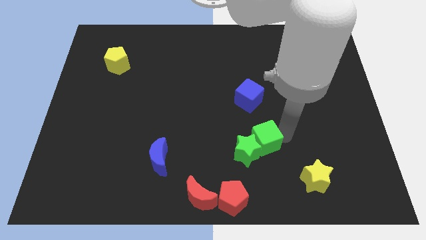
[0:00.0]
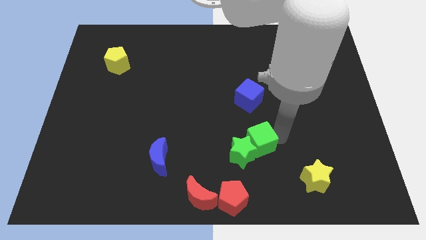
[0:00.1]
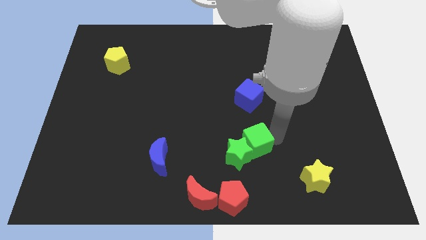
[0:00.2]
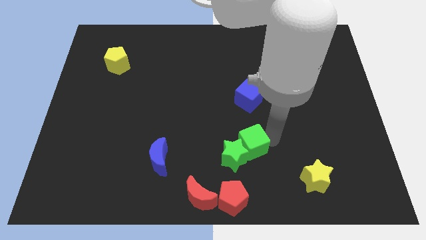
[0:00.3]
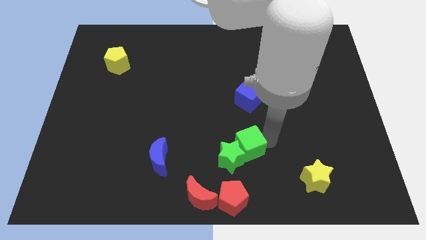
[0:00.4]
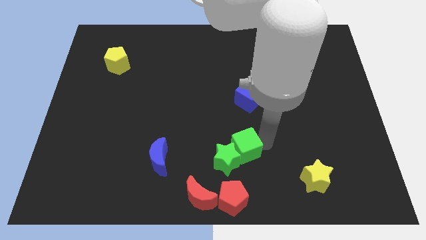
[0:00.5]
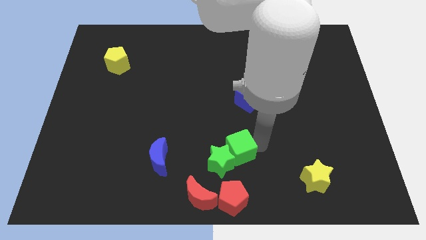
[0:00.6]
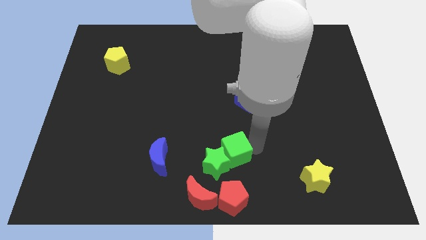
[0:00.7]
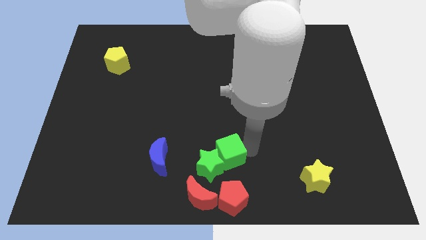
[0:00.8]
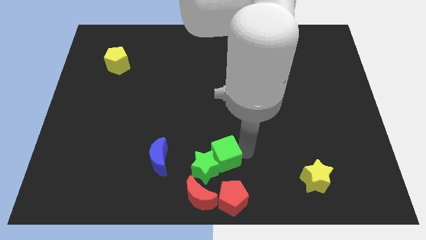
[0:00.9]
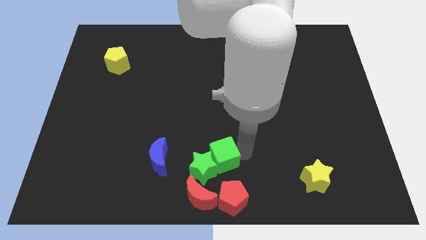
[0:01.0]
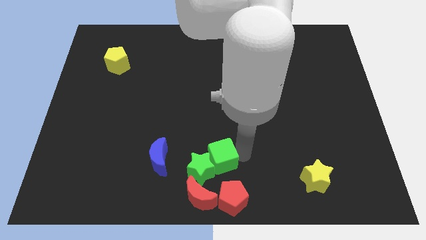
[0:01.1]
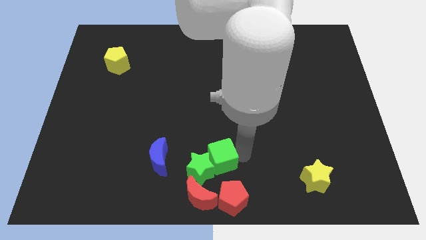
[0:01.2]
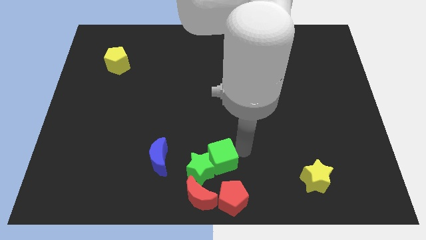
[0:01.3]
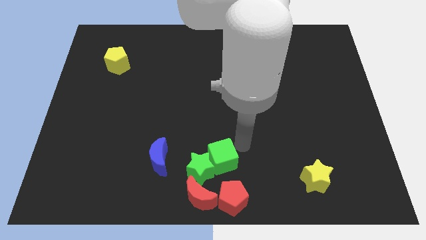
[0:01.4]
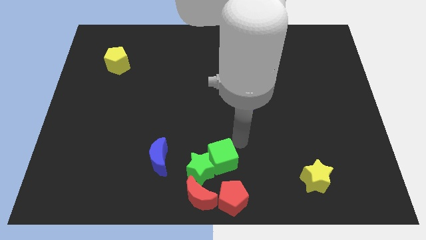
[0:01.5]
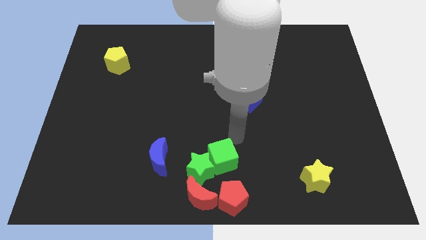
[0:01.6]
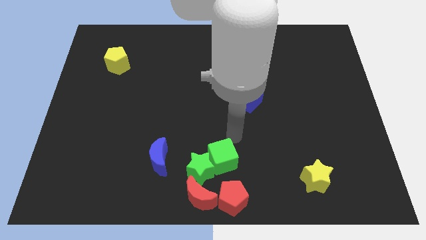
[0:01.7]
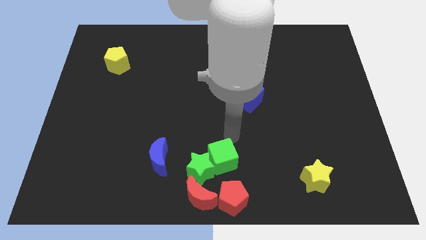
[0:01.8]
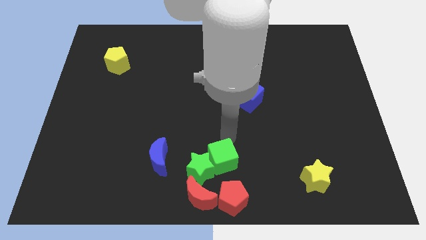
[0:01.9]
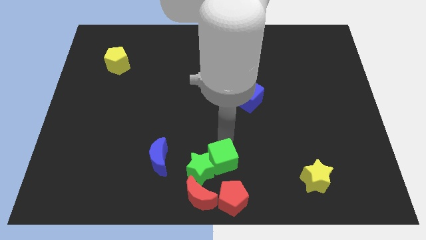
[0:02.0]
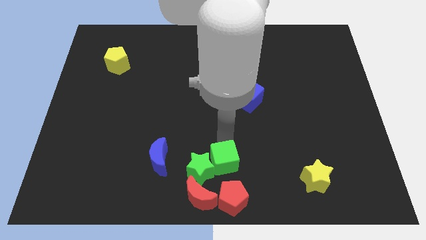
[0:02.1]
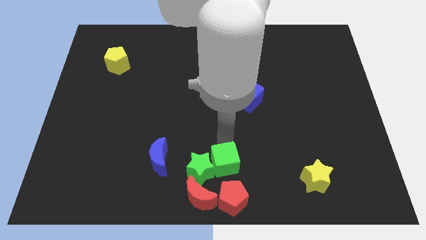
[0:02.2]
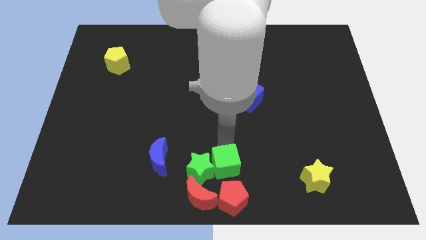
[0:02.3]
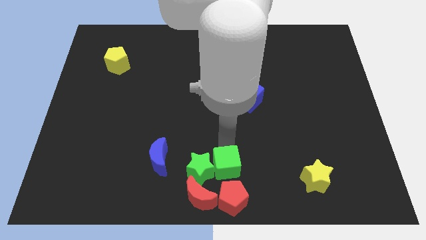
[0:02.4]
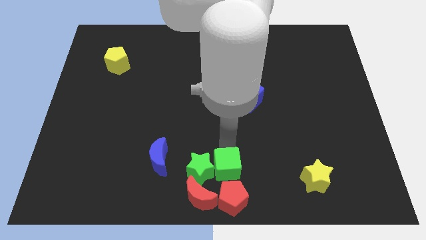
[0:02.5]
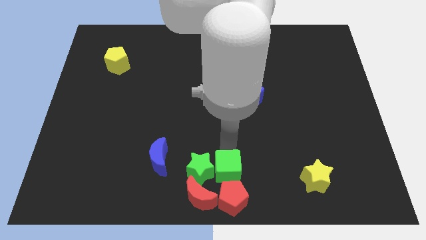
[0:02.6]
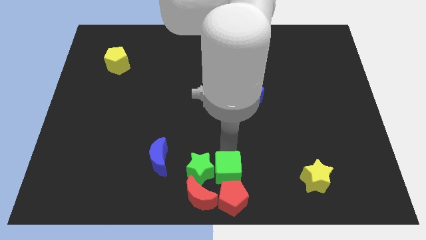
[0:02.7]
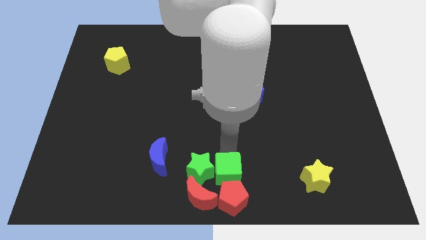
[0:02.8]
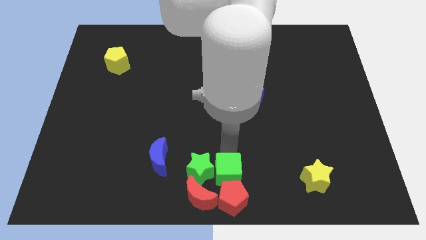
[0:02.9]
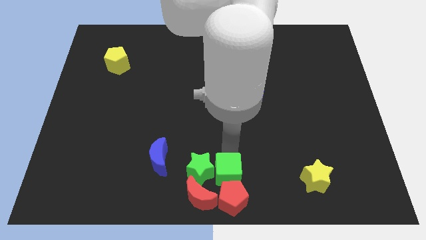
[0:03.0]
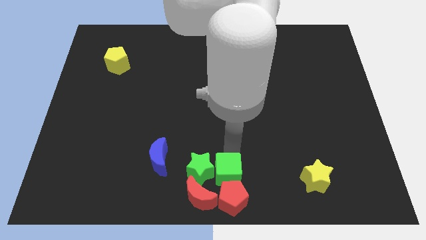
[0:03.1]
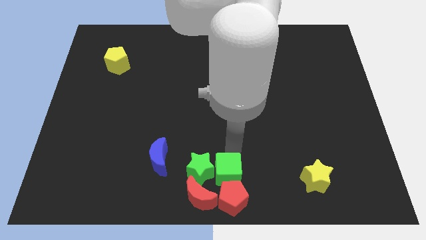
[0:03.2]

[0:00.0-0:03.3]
make a group of green and red blocks

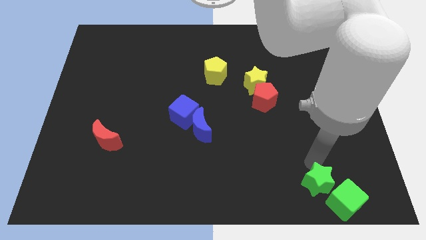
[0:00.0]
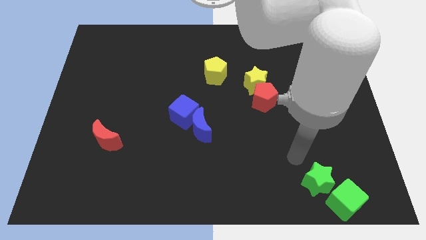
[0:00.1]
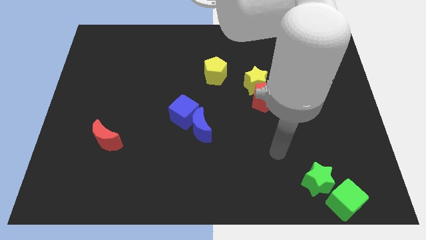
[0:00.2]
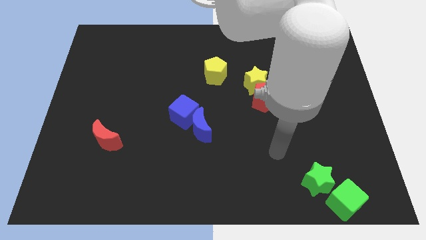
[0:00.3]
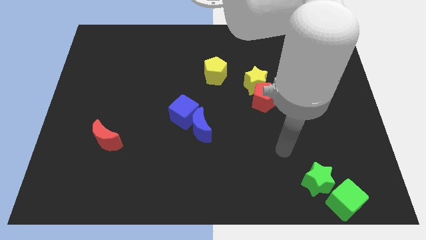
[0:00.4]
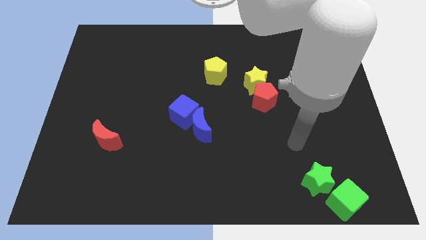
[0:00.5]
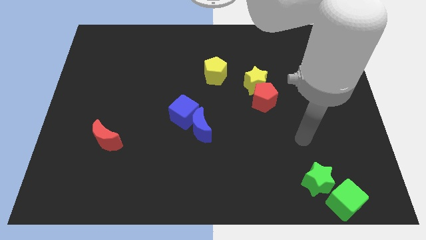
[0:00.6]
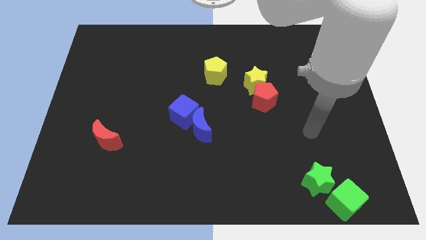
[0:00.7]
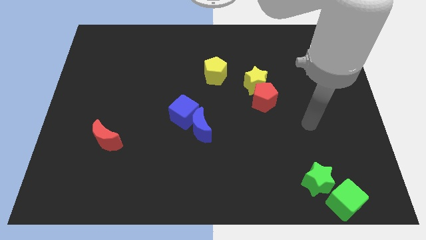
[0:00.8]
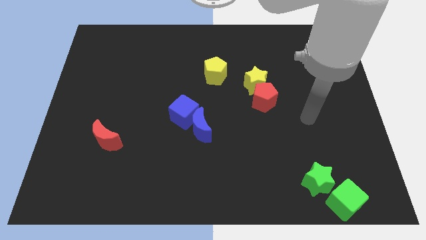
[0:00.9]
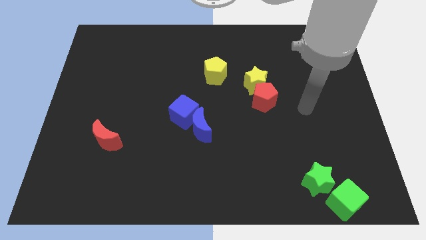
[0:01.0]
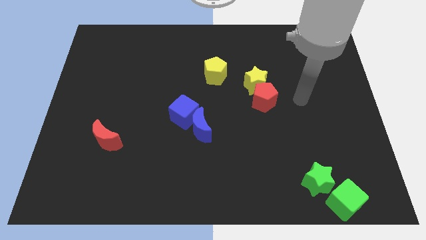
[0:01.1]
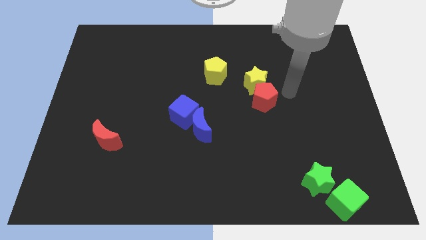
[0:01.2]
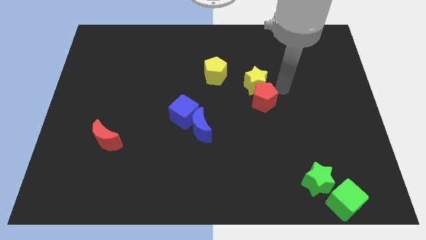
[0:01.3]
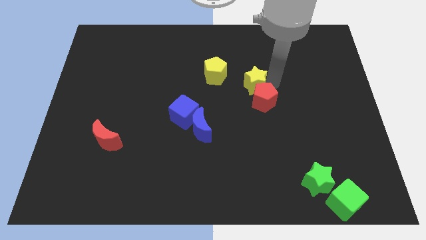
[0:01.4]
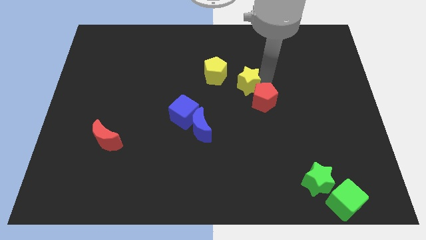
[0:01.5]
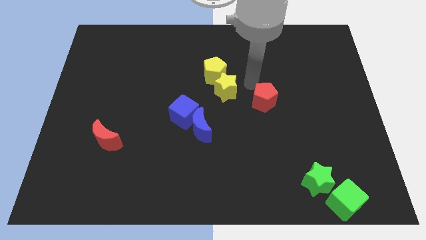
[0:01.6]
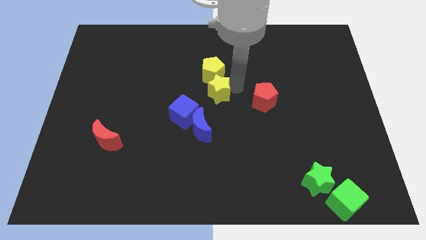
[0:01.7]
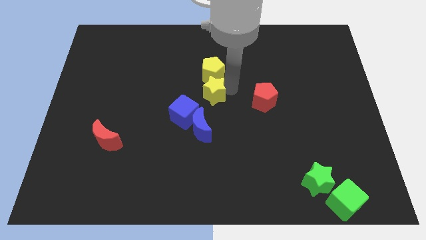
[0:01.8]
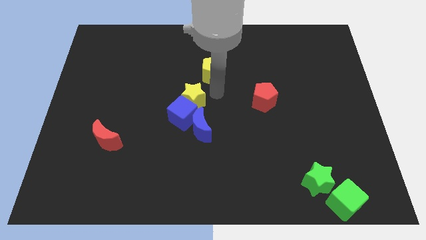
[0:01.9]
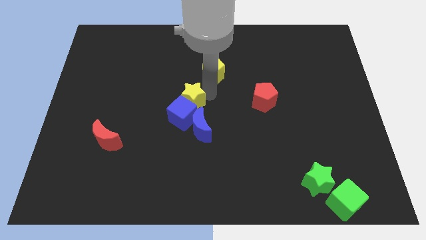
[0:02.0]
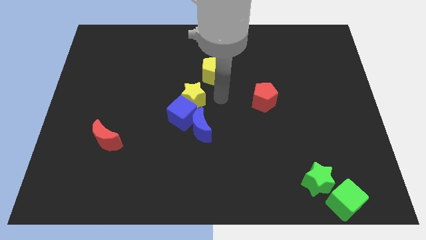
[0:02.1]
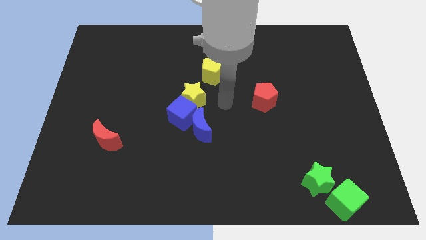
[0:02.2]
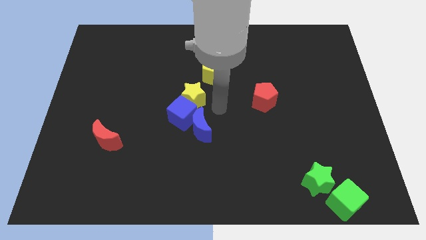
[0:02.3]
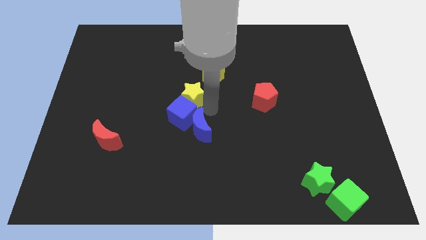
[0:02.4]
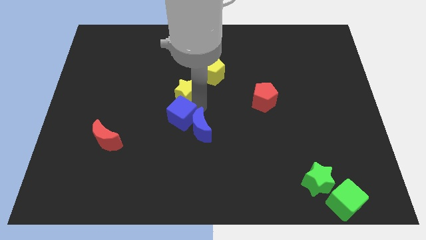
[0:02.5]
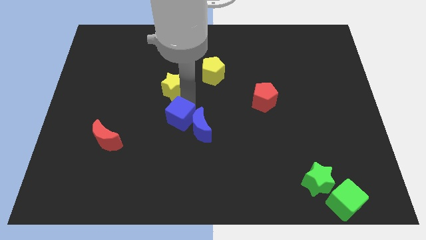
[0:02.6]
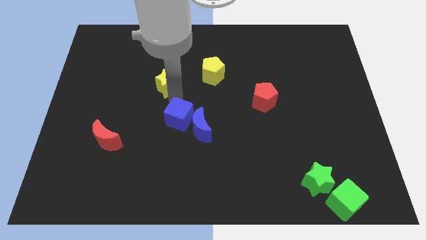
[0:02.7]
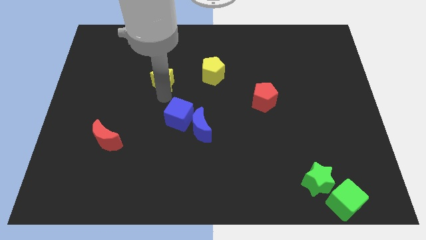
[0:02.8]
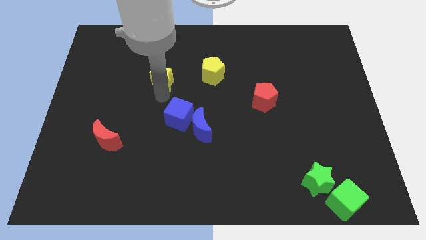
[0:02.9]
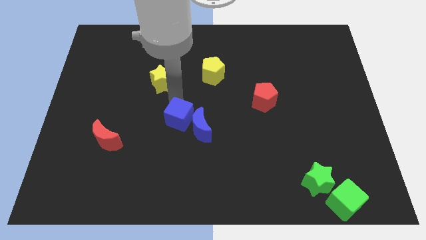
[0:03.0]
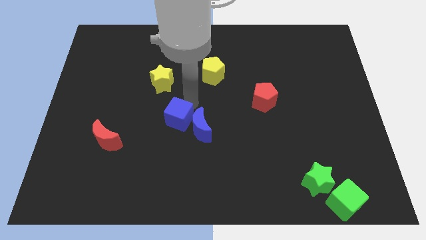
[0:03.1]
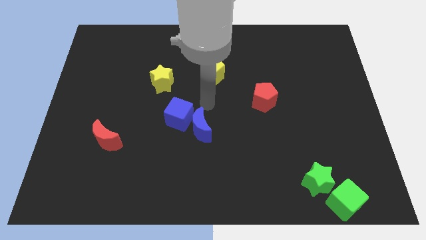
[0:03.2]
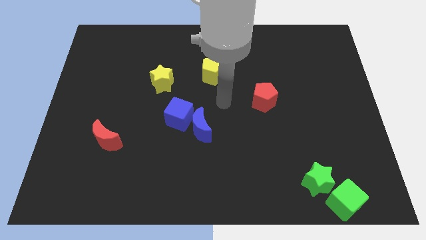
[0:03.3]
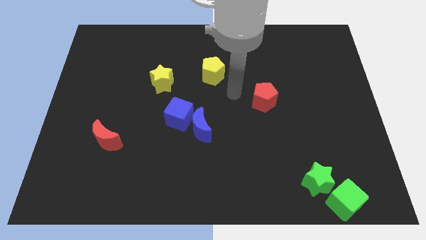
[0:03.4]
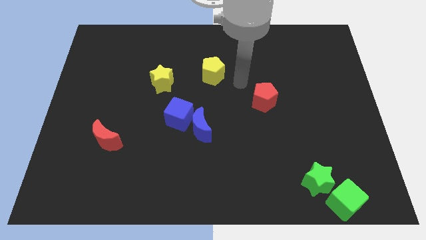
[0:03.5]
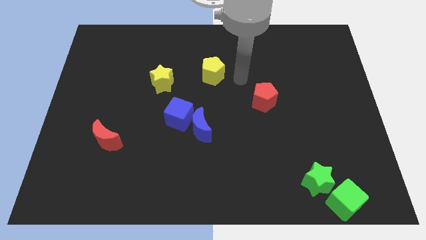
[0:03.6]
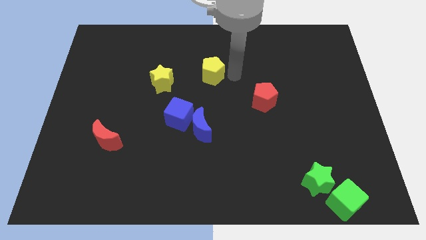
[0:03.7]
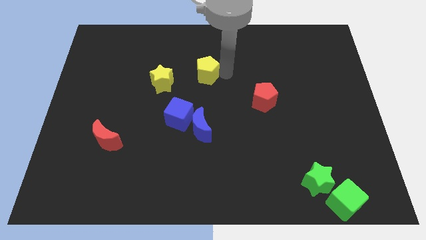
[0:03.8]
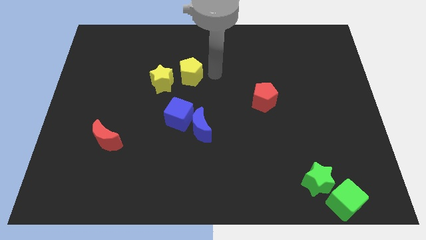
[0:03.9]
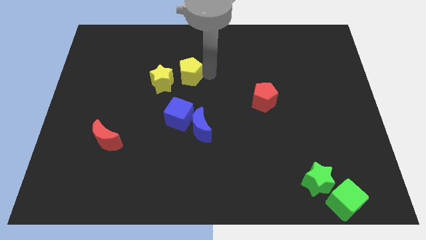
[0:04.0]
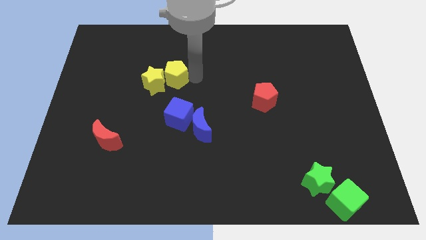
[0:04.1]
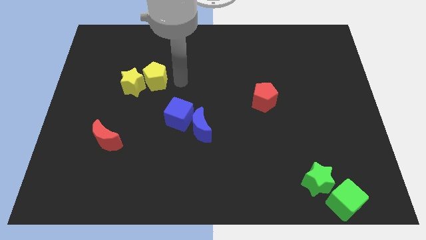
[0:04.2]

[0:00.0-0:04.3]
slide the yellow blocks to the left side of the table

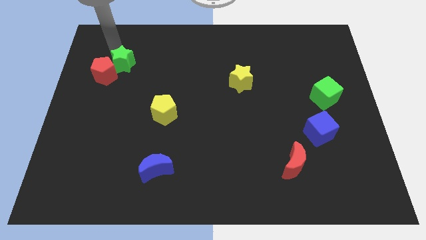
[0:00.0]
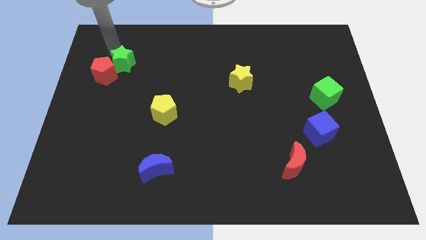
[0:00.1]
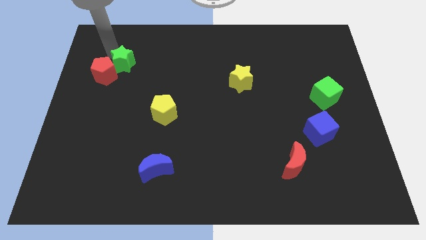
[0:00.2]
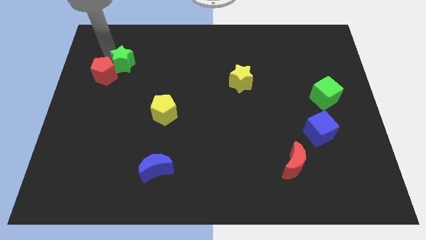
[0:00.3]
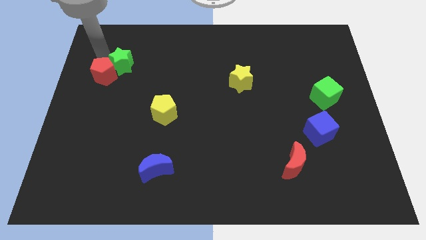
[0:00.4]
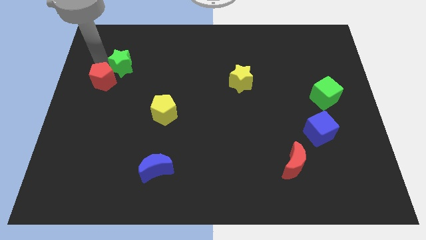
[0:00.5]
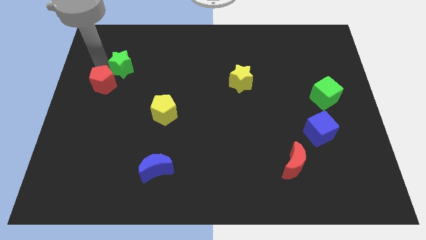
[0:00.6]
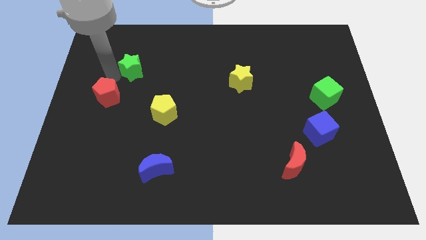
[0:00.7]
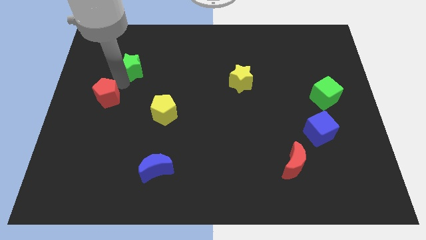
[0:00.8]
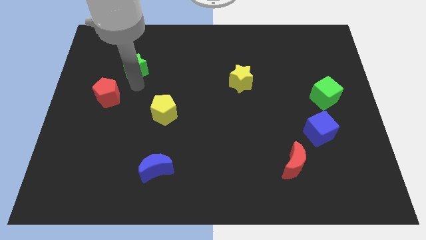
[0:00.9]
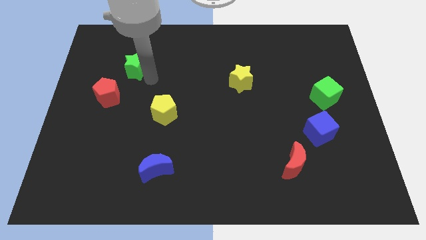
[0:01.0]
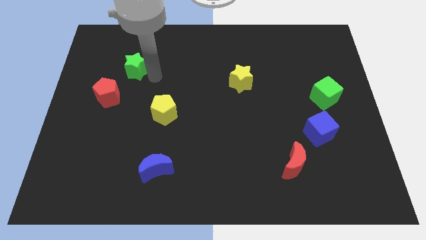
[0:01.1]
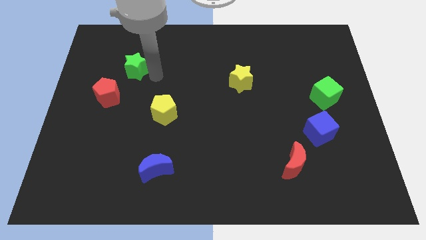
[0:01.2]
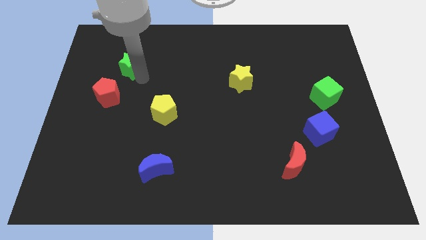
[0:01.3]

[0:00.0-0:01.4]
separate the green star from the red pentagon
